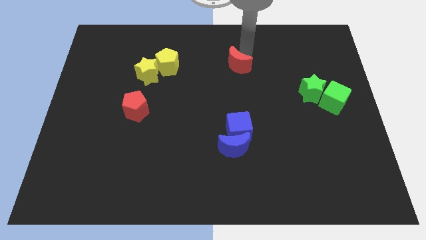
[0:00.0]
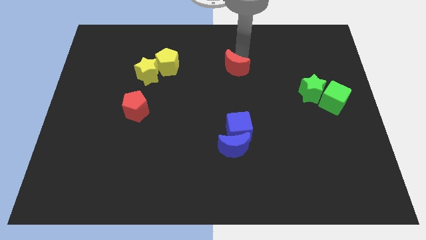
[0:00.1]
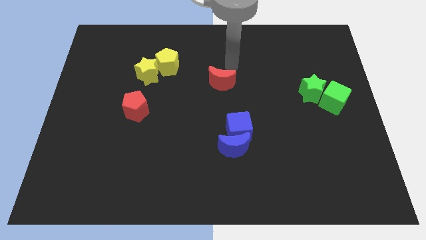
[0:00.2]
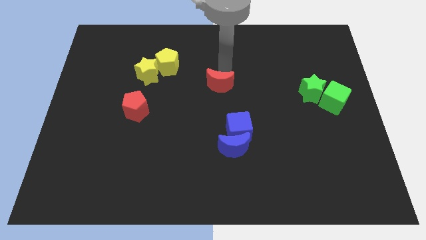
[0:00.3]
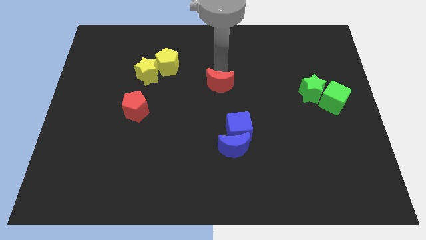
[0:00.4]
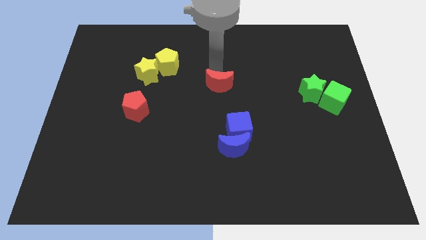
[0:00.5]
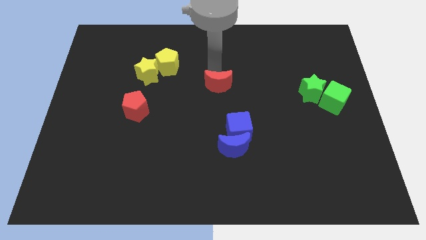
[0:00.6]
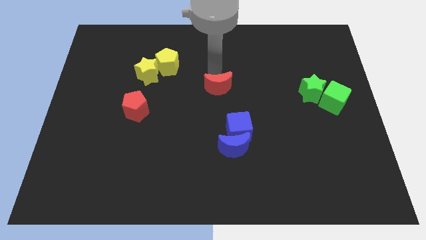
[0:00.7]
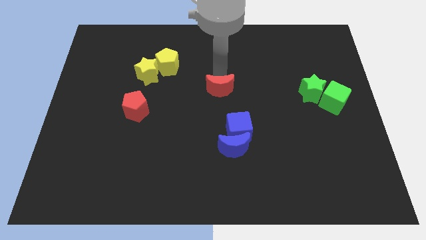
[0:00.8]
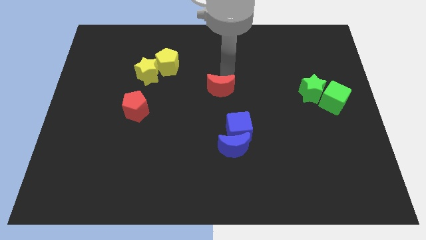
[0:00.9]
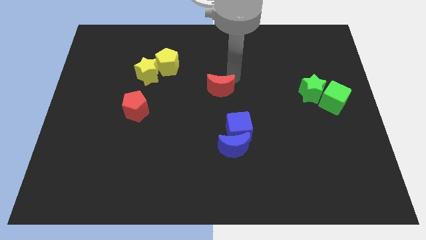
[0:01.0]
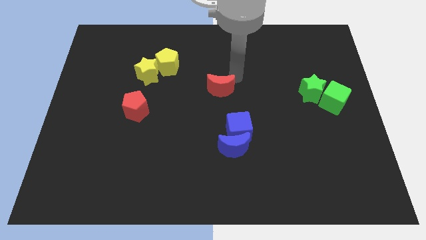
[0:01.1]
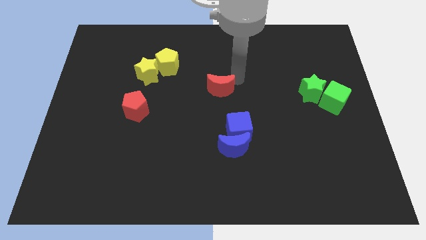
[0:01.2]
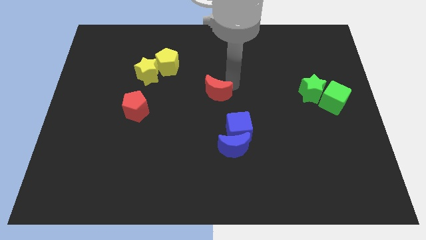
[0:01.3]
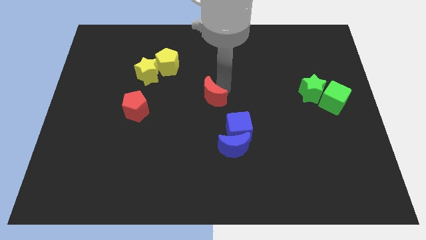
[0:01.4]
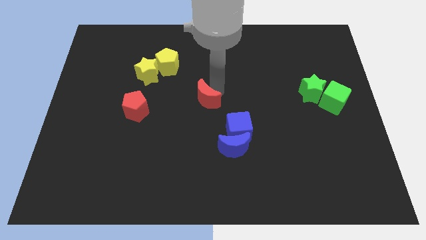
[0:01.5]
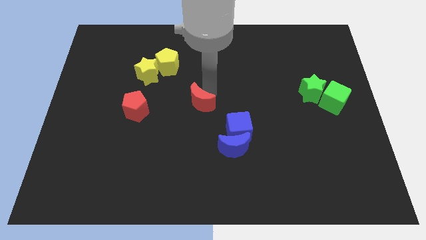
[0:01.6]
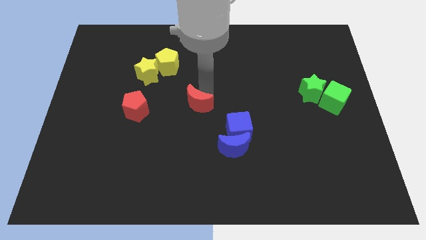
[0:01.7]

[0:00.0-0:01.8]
slide the red moon towards the red pentagon

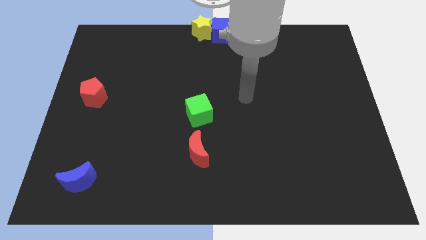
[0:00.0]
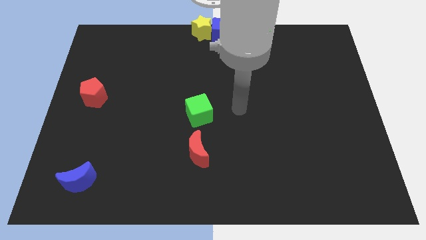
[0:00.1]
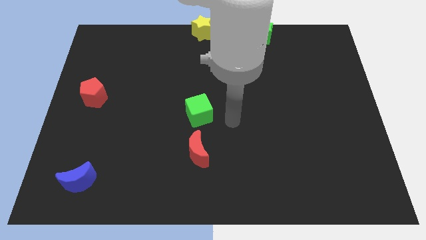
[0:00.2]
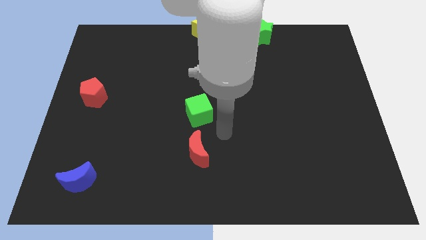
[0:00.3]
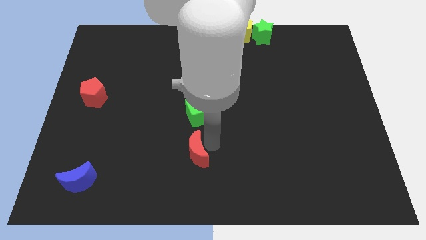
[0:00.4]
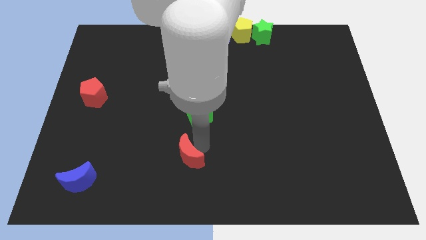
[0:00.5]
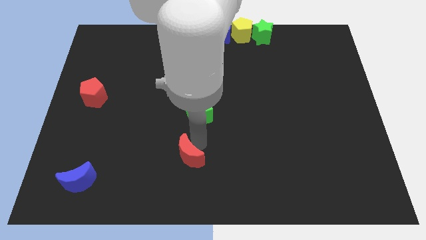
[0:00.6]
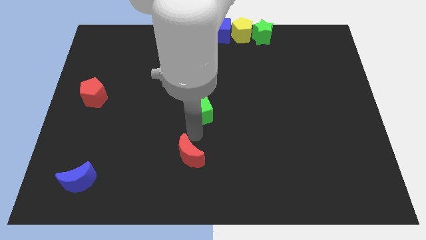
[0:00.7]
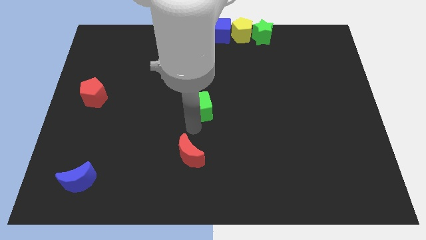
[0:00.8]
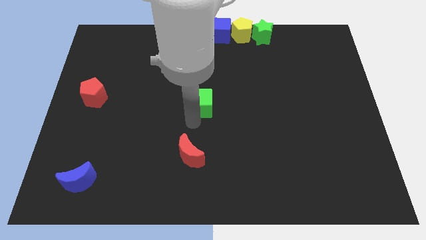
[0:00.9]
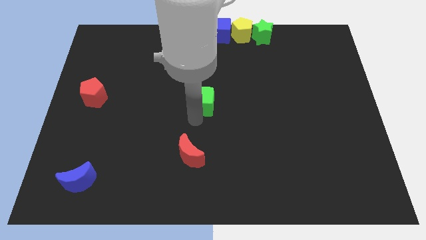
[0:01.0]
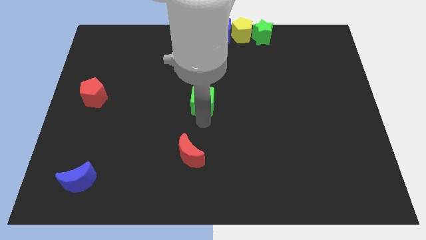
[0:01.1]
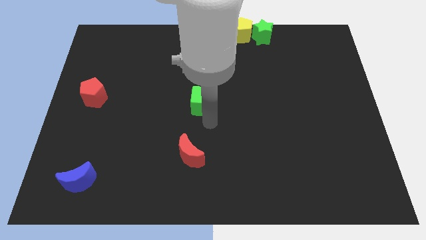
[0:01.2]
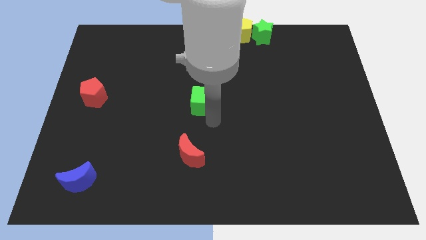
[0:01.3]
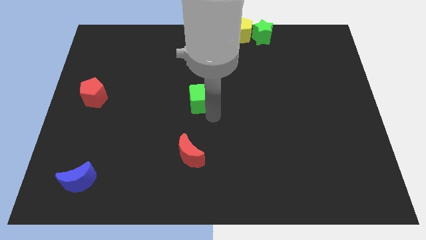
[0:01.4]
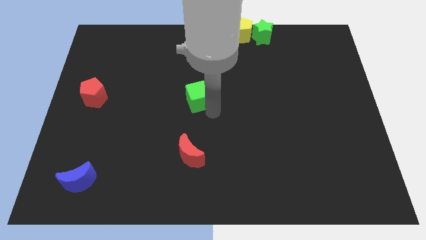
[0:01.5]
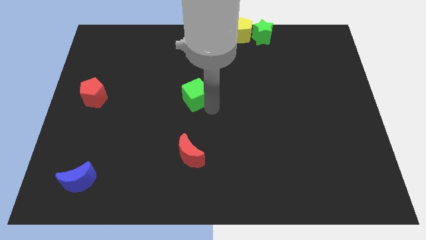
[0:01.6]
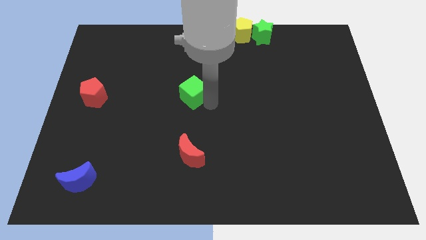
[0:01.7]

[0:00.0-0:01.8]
push the green cube horizontally to the right side of the red pentagon

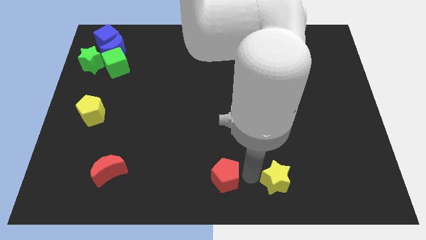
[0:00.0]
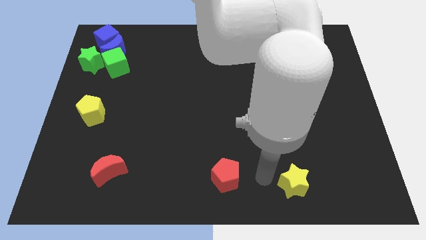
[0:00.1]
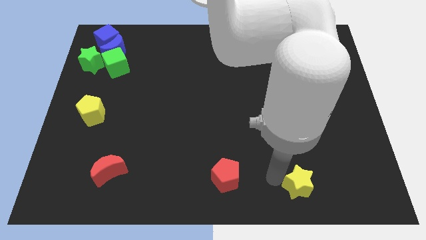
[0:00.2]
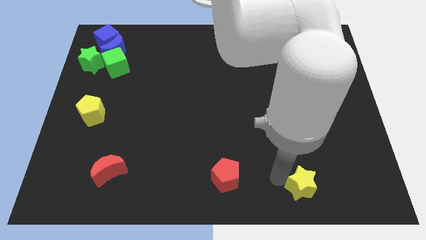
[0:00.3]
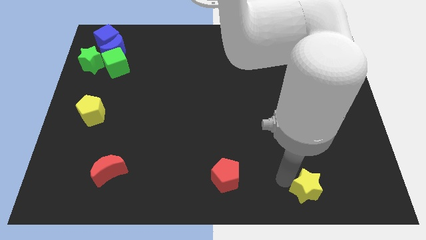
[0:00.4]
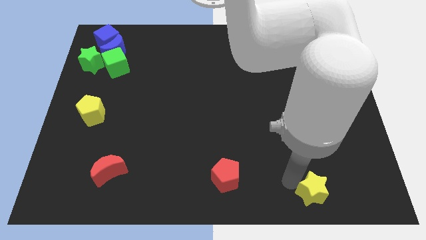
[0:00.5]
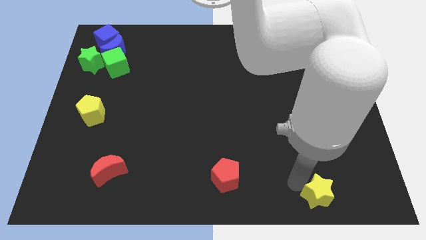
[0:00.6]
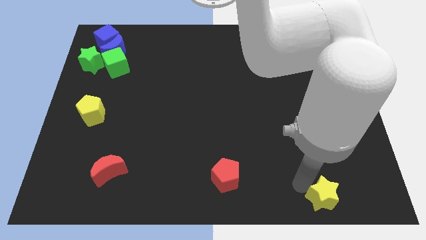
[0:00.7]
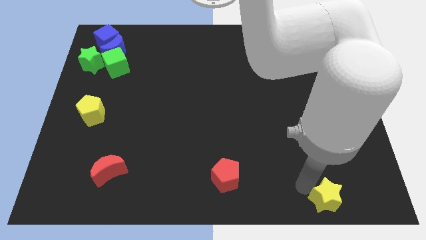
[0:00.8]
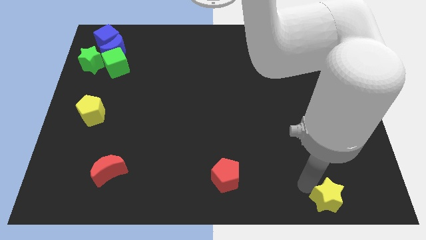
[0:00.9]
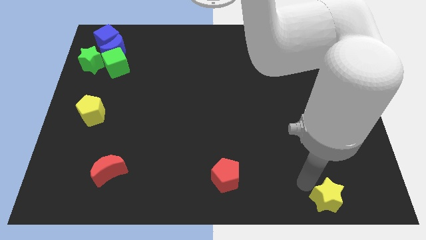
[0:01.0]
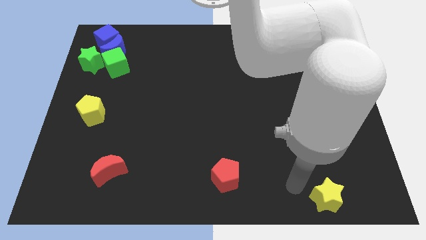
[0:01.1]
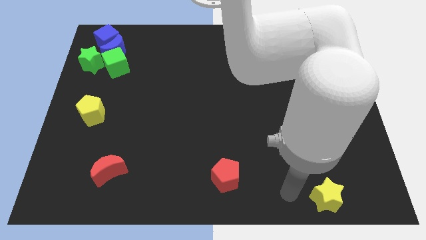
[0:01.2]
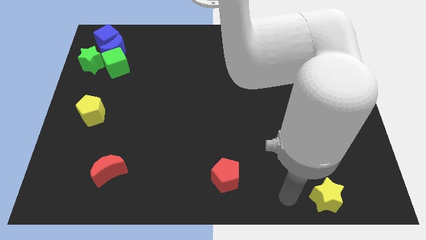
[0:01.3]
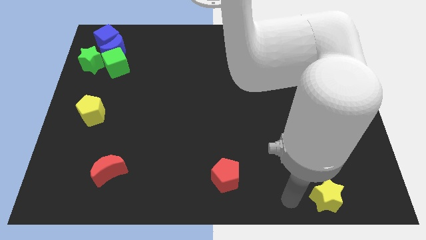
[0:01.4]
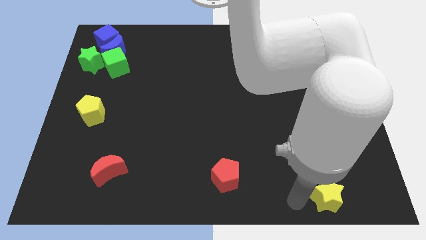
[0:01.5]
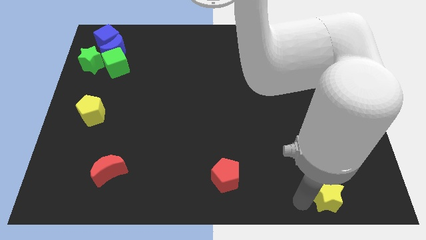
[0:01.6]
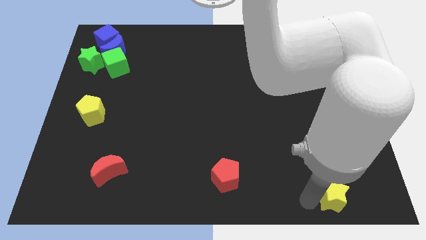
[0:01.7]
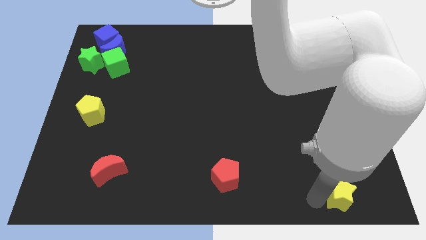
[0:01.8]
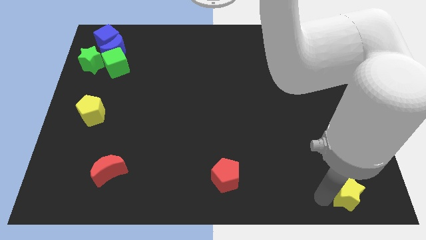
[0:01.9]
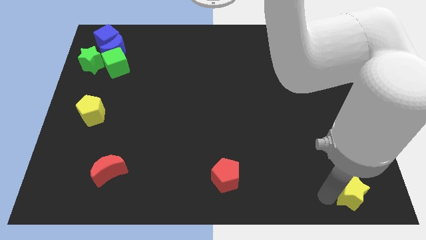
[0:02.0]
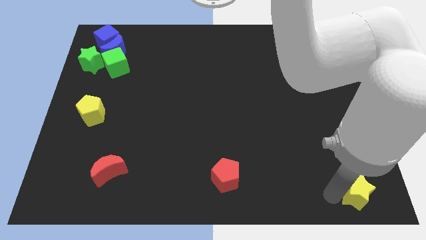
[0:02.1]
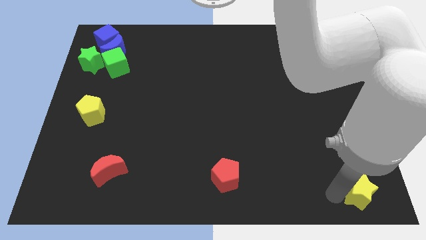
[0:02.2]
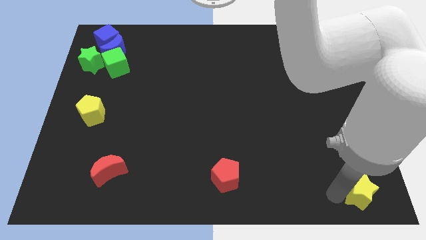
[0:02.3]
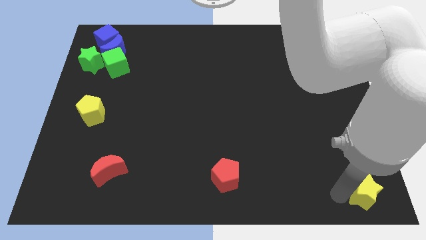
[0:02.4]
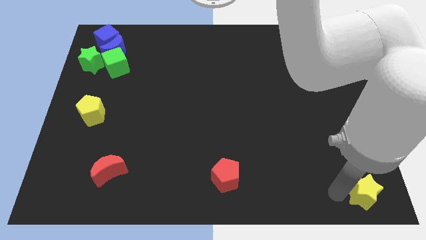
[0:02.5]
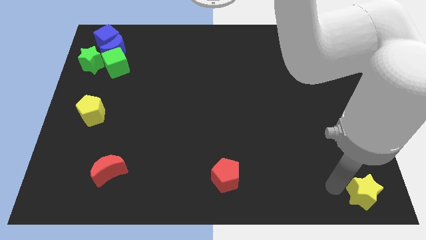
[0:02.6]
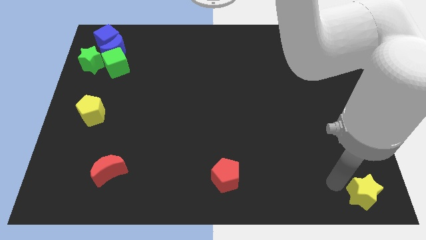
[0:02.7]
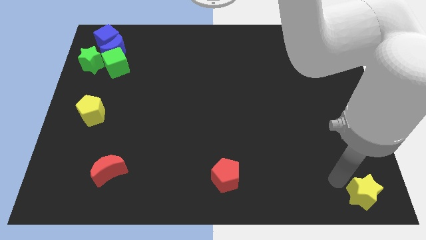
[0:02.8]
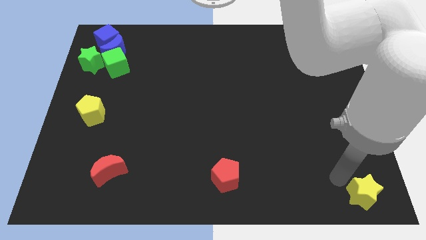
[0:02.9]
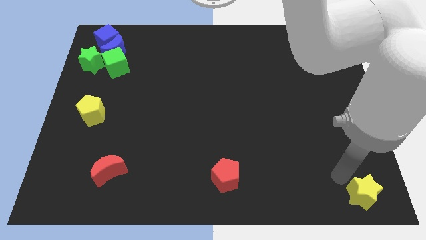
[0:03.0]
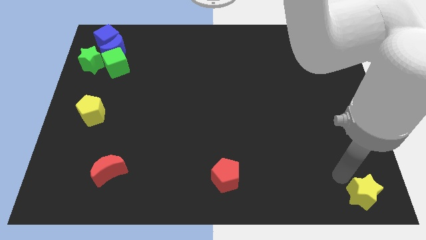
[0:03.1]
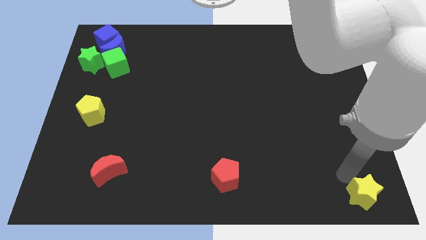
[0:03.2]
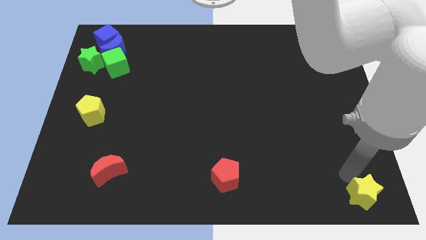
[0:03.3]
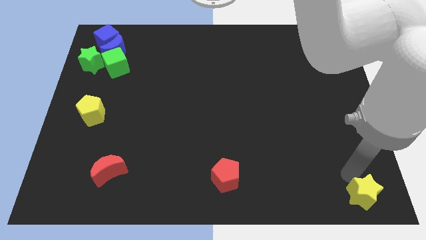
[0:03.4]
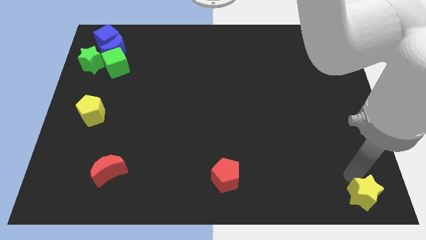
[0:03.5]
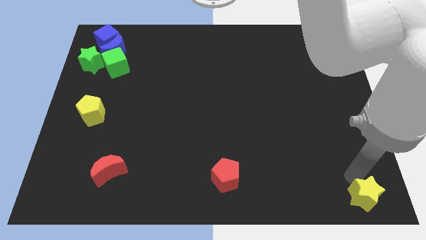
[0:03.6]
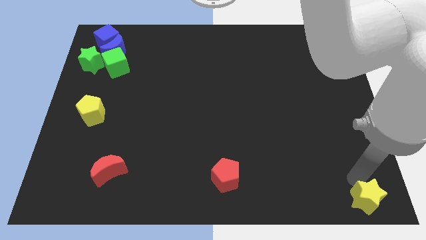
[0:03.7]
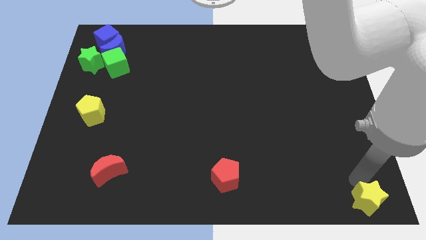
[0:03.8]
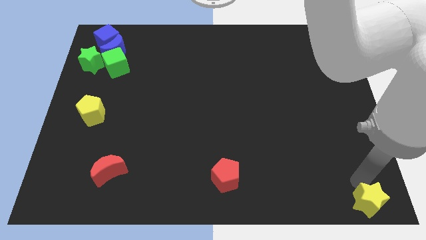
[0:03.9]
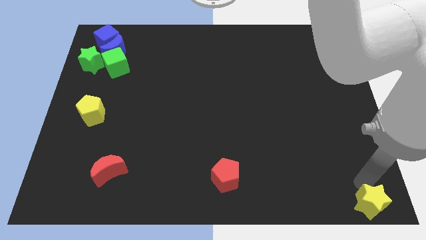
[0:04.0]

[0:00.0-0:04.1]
push the green star to the bottom right side of the board

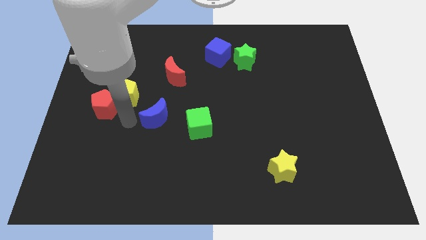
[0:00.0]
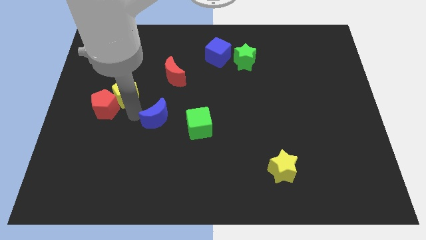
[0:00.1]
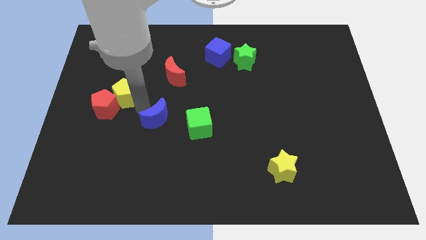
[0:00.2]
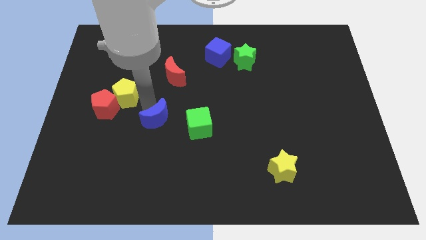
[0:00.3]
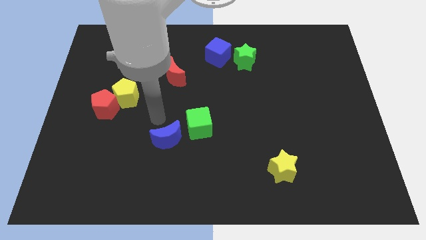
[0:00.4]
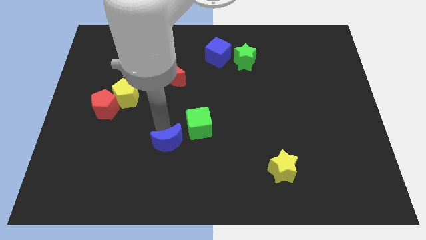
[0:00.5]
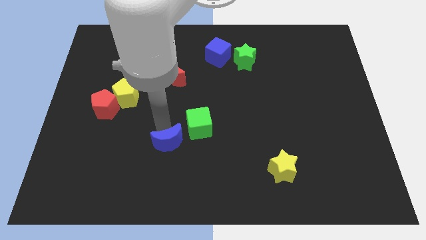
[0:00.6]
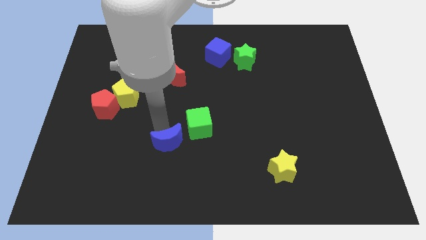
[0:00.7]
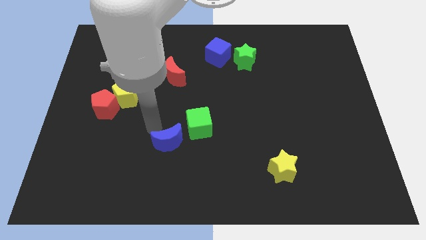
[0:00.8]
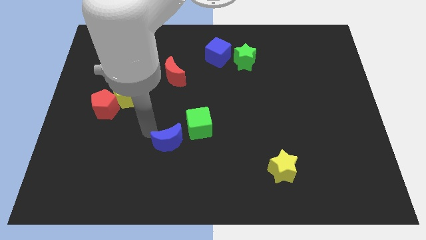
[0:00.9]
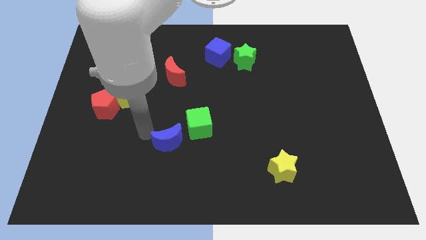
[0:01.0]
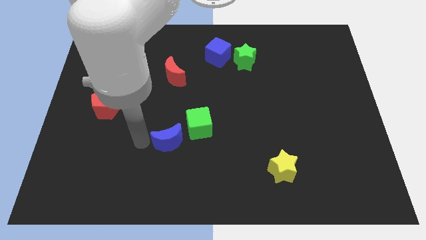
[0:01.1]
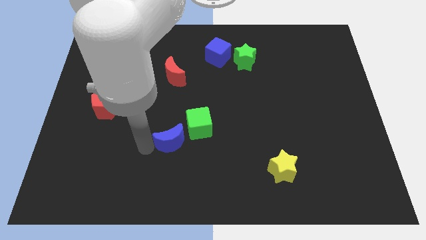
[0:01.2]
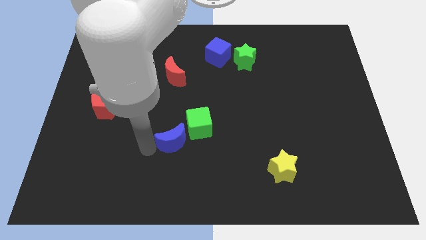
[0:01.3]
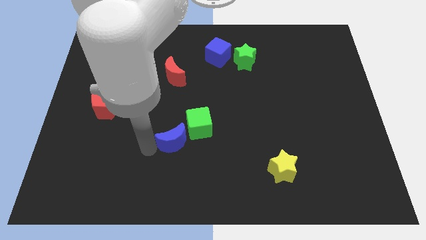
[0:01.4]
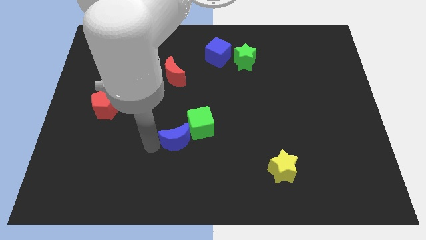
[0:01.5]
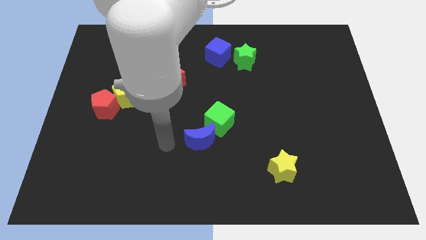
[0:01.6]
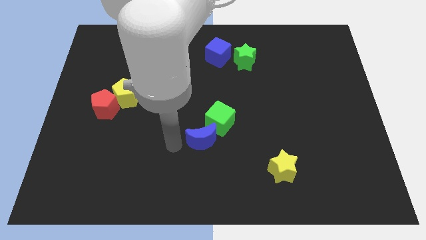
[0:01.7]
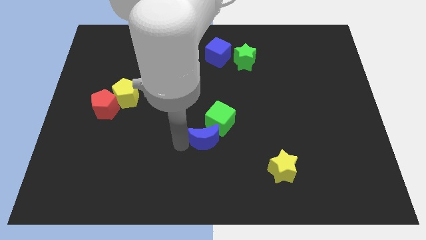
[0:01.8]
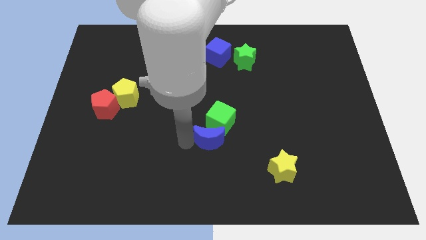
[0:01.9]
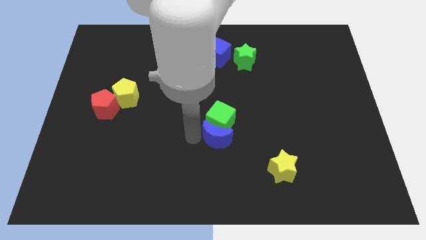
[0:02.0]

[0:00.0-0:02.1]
drag the blue moon into the green cube
